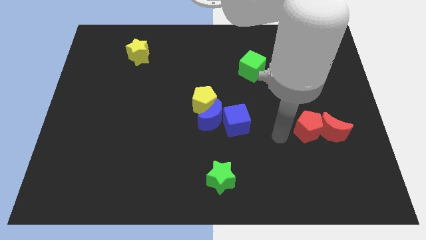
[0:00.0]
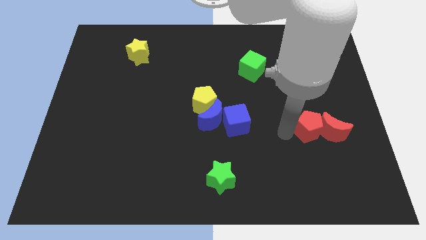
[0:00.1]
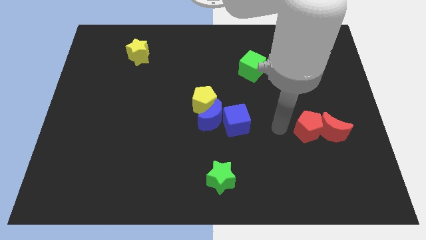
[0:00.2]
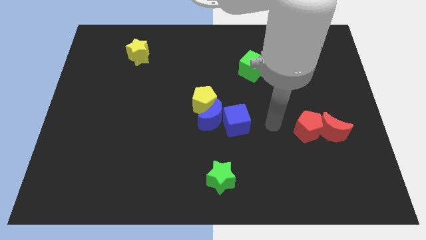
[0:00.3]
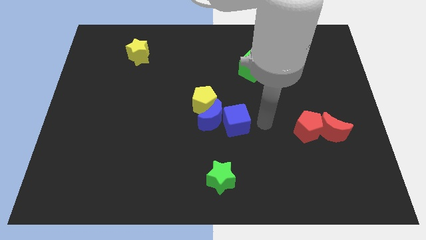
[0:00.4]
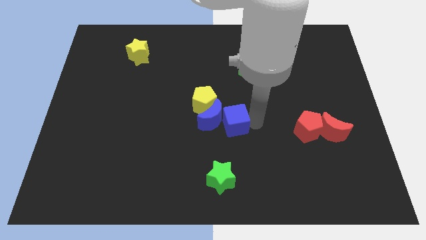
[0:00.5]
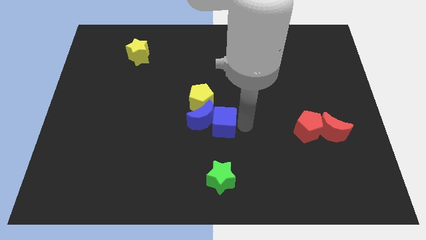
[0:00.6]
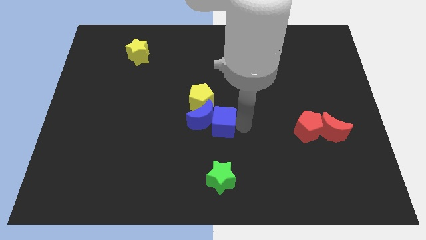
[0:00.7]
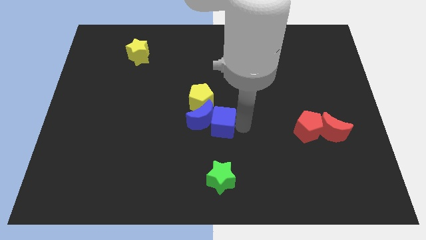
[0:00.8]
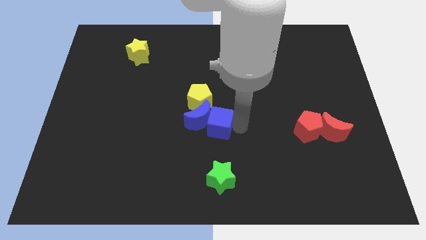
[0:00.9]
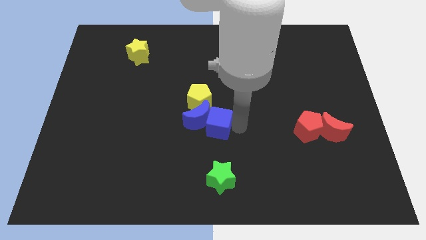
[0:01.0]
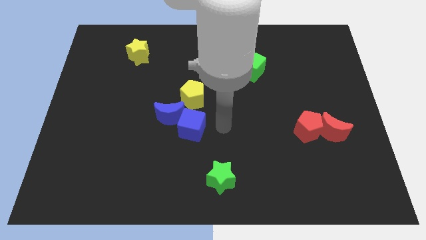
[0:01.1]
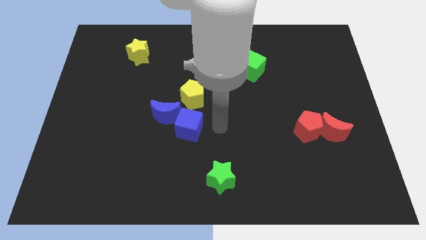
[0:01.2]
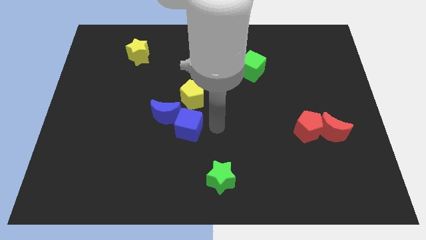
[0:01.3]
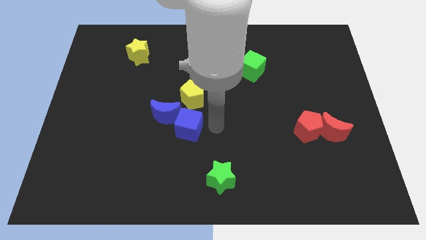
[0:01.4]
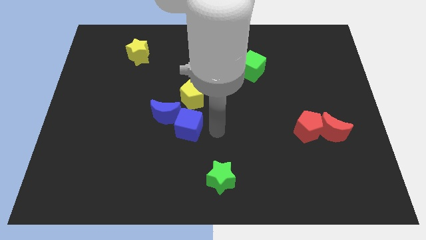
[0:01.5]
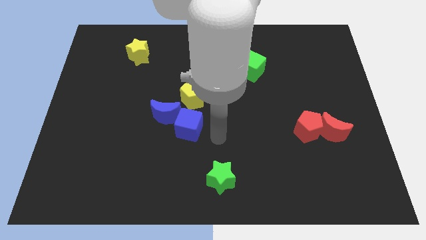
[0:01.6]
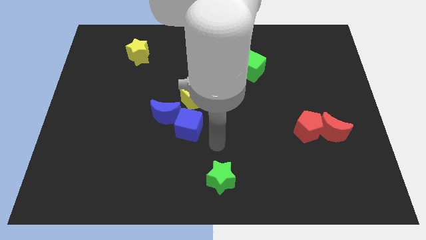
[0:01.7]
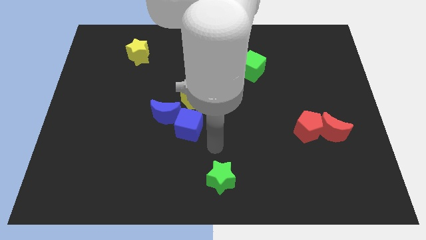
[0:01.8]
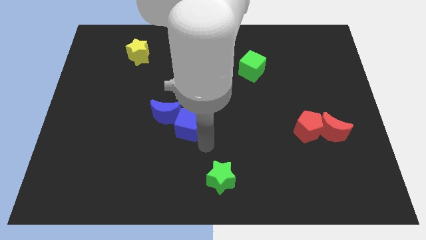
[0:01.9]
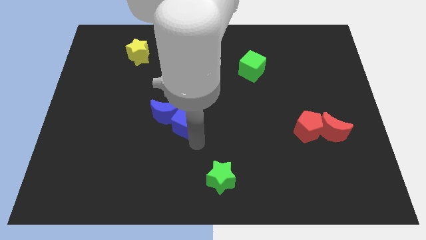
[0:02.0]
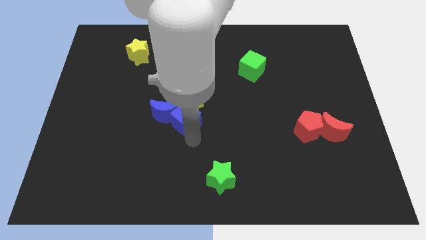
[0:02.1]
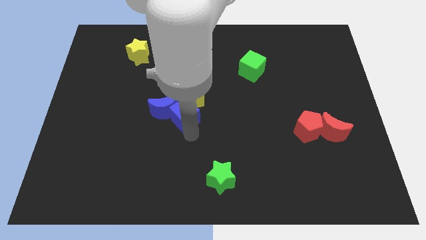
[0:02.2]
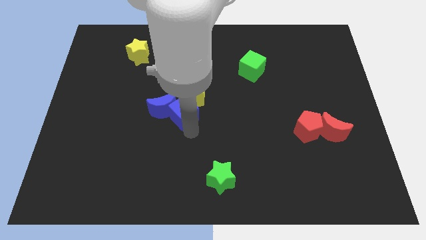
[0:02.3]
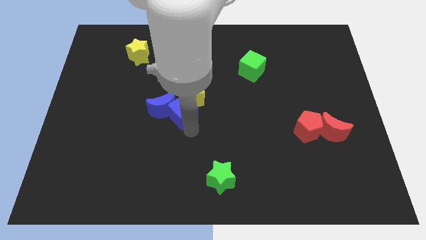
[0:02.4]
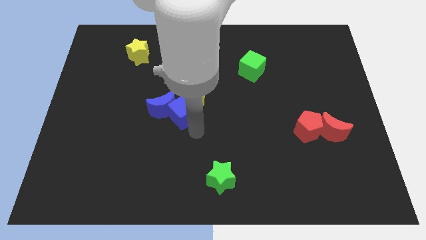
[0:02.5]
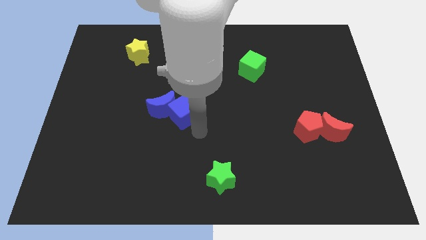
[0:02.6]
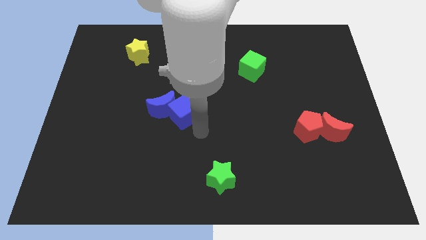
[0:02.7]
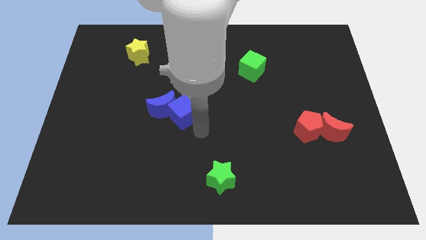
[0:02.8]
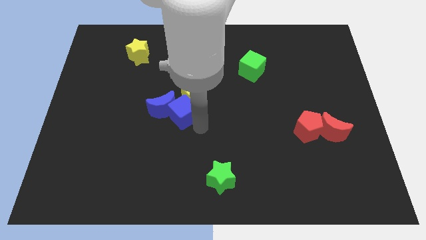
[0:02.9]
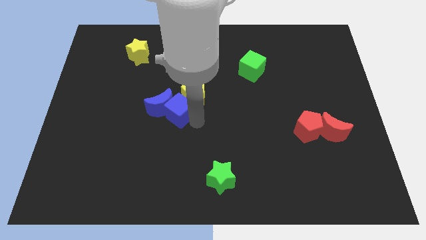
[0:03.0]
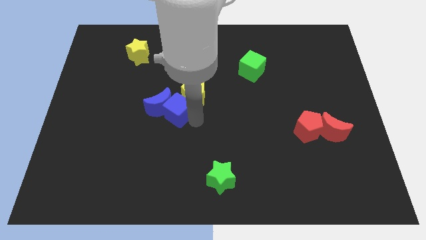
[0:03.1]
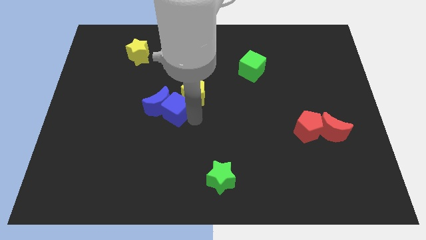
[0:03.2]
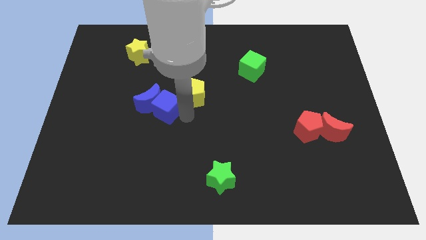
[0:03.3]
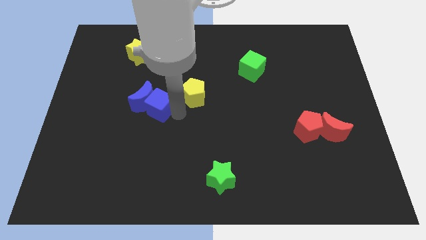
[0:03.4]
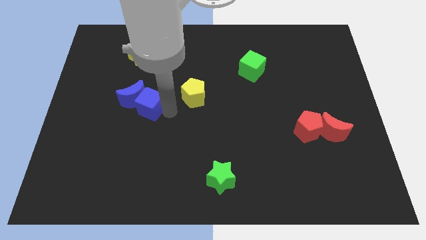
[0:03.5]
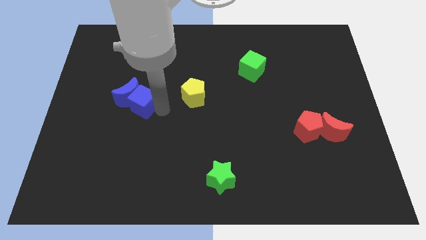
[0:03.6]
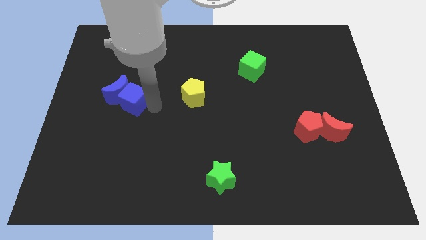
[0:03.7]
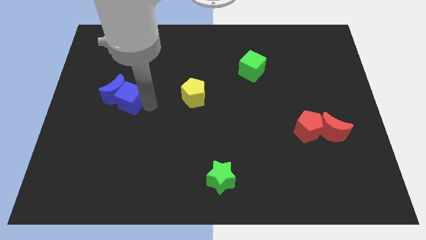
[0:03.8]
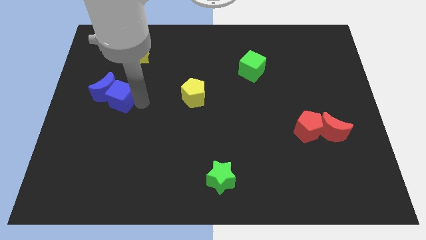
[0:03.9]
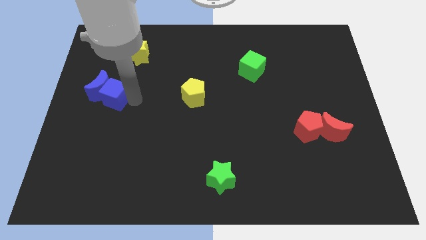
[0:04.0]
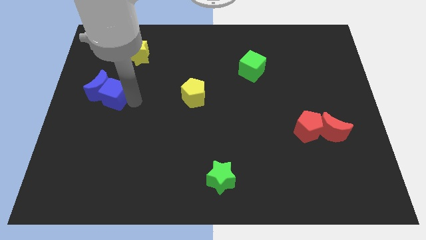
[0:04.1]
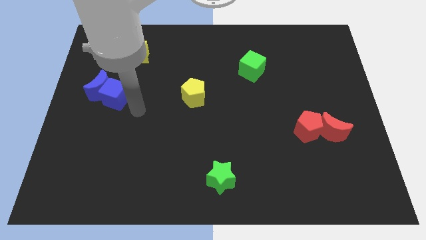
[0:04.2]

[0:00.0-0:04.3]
separate blue blocks from the yellow pentagon

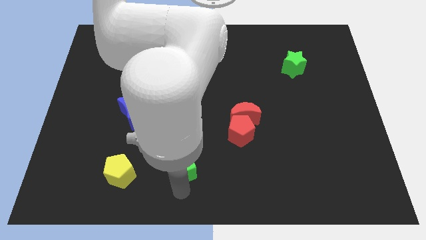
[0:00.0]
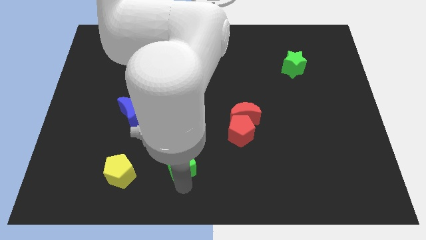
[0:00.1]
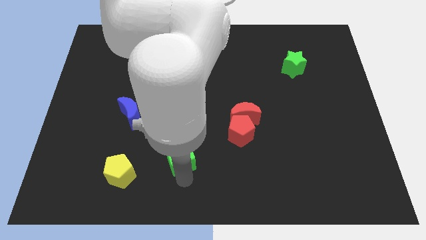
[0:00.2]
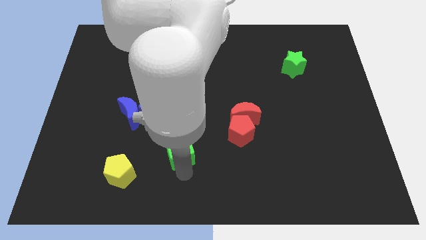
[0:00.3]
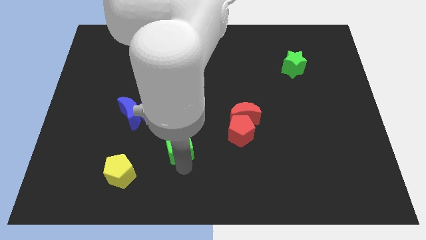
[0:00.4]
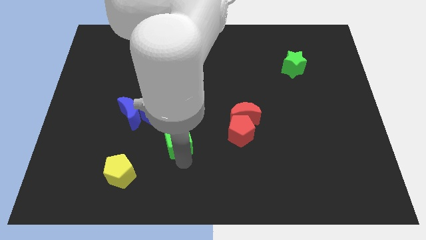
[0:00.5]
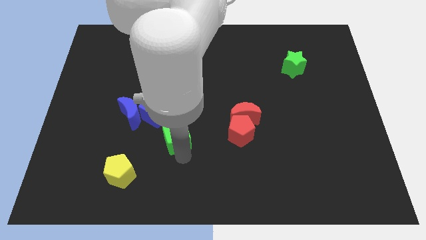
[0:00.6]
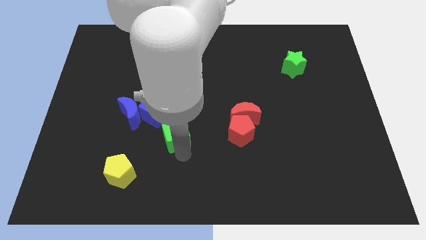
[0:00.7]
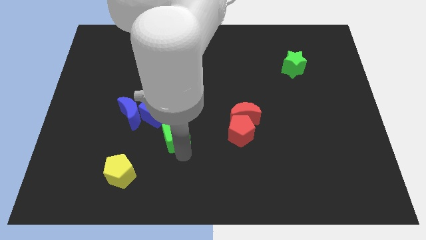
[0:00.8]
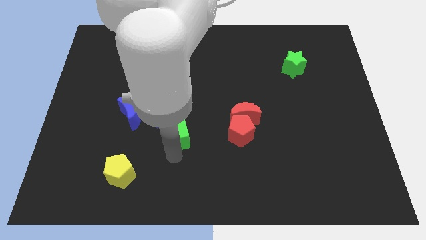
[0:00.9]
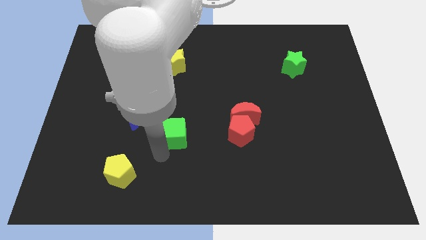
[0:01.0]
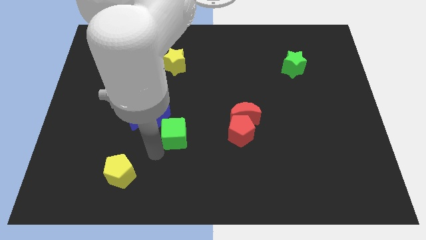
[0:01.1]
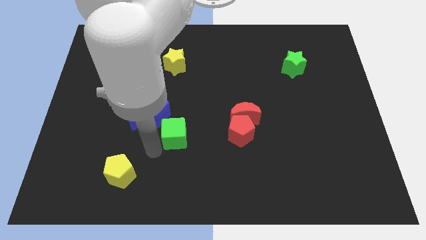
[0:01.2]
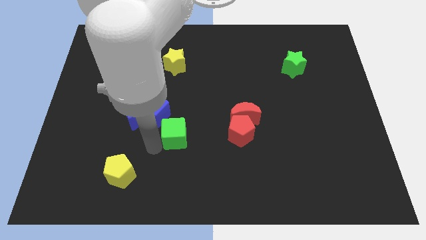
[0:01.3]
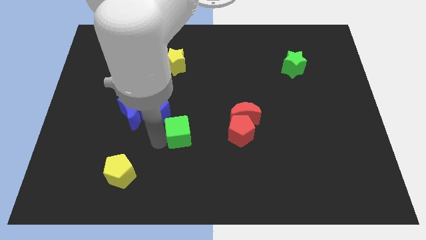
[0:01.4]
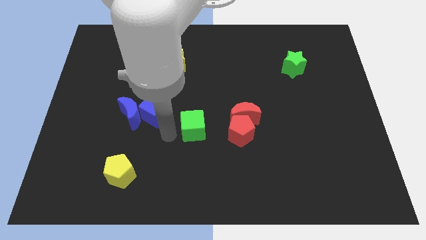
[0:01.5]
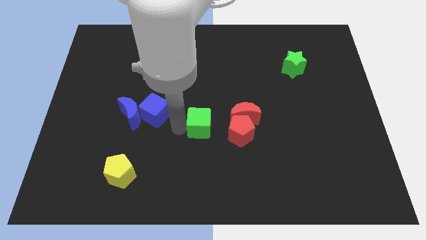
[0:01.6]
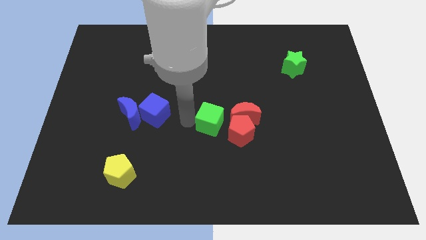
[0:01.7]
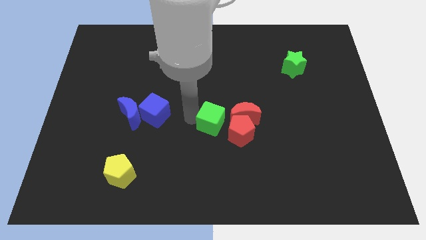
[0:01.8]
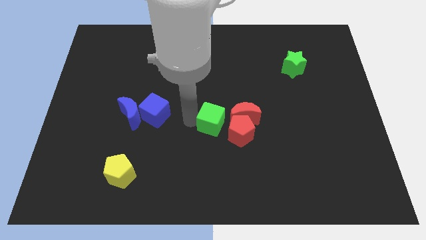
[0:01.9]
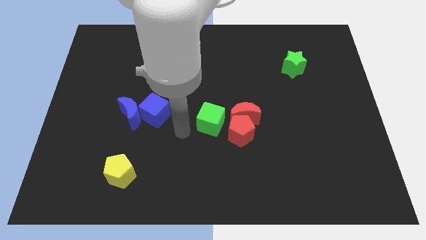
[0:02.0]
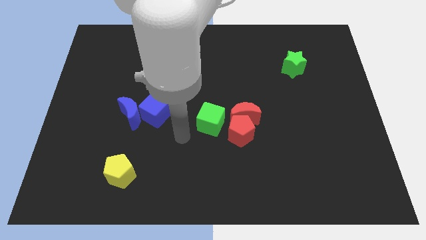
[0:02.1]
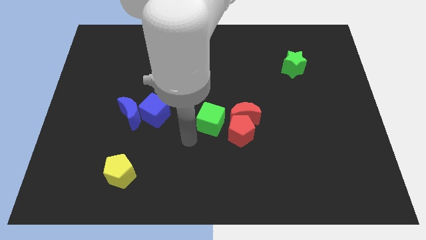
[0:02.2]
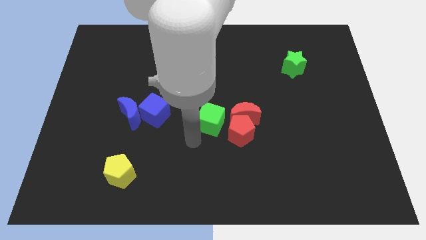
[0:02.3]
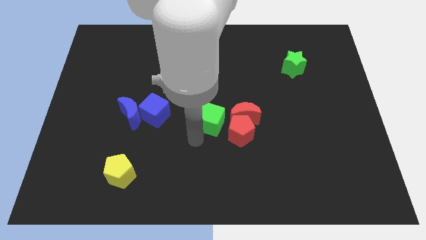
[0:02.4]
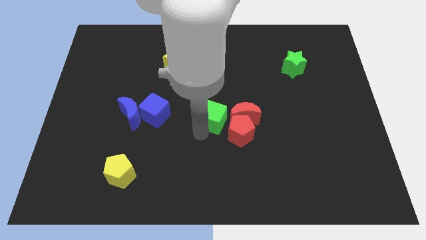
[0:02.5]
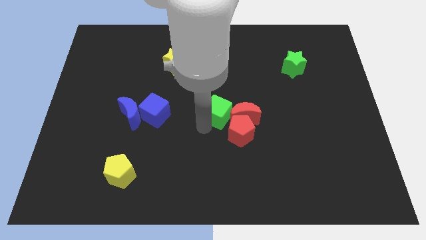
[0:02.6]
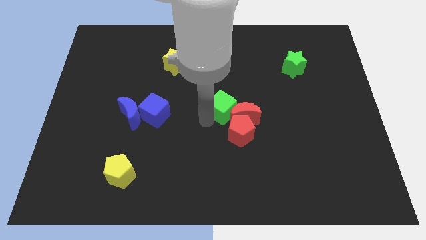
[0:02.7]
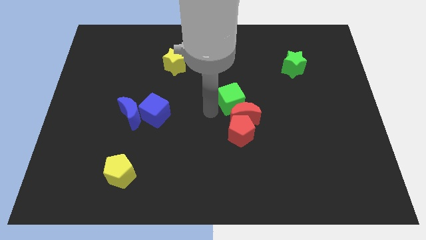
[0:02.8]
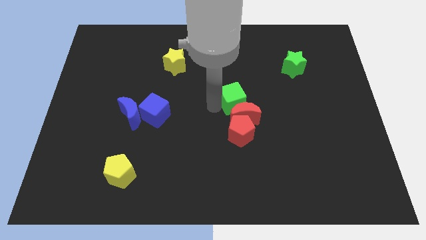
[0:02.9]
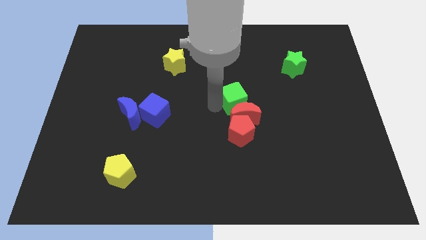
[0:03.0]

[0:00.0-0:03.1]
push the green cube to the top left of red moon

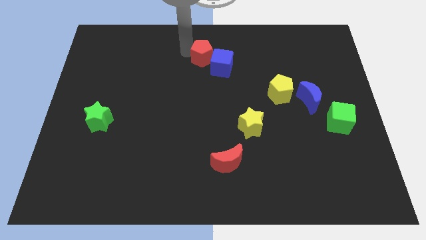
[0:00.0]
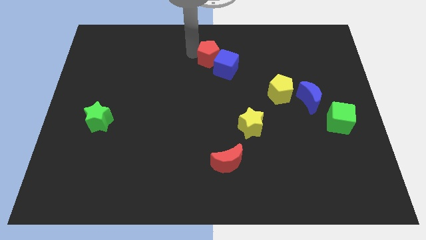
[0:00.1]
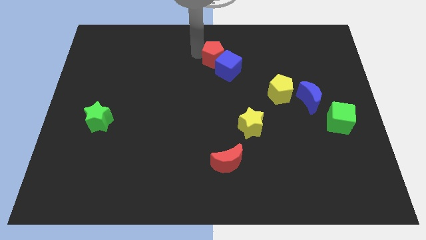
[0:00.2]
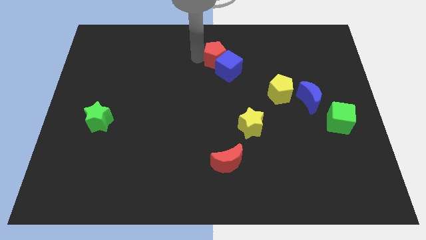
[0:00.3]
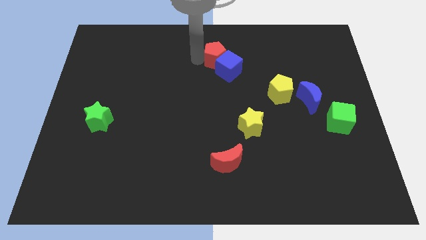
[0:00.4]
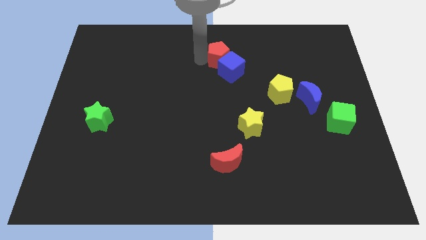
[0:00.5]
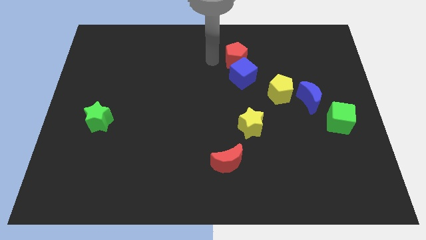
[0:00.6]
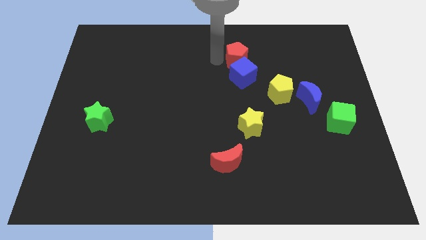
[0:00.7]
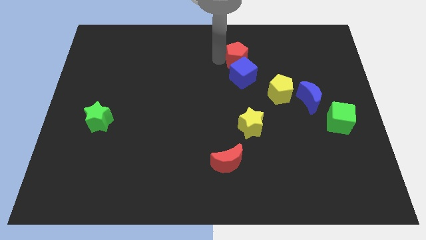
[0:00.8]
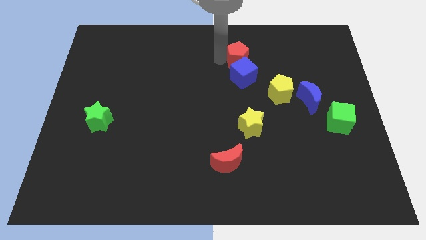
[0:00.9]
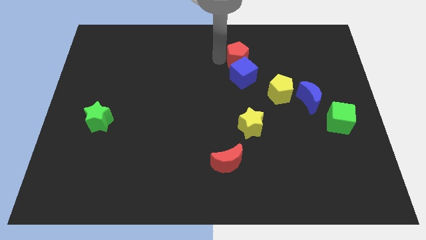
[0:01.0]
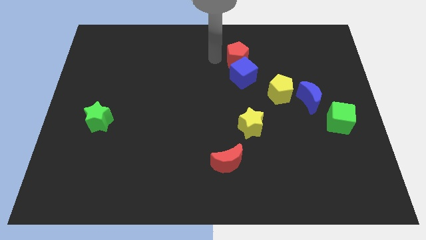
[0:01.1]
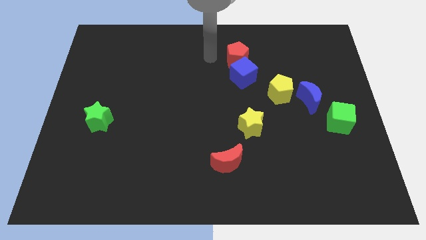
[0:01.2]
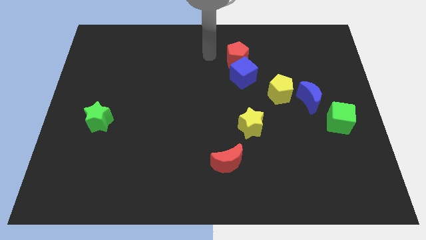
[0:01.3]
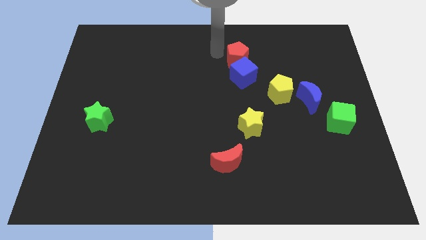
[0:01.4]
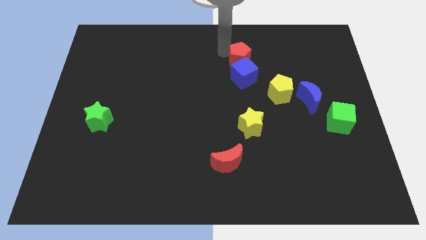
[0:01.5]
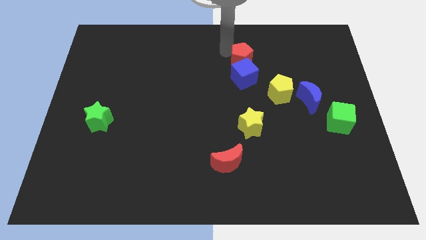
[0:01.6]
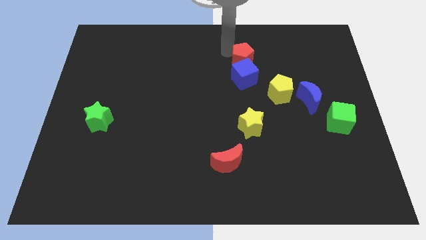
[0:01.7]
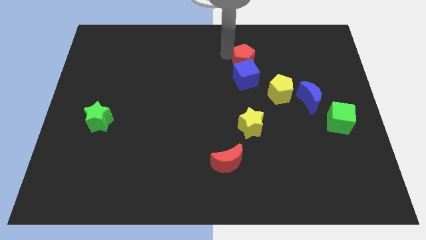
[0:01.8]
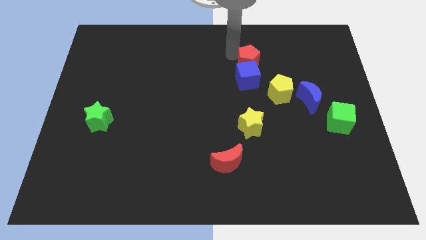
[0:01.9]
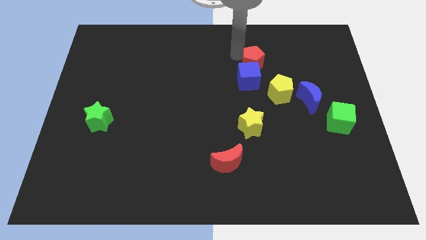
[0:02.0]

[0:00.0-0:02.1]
push red pentagon and blue cube towards yellow pentagon
